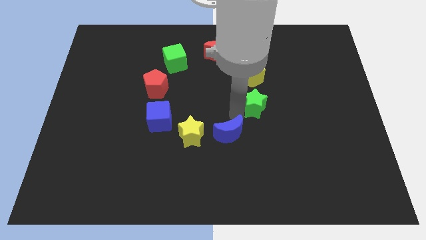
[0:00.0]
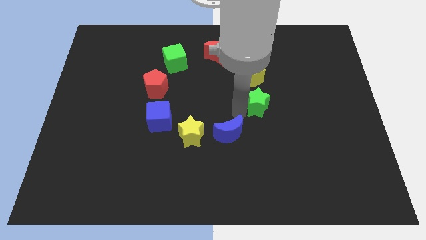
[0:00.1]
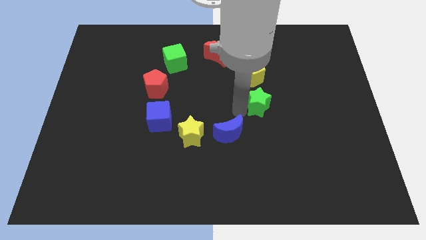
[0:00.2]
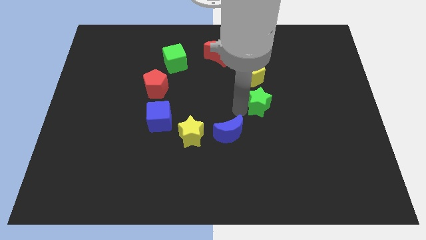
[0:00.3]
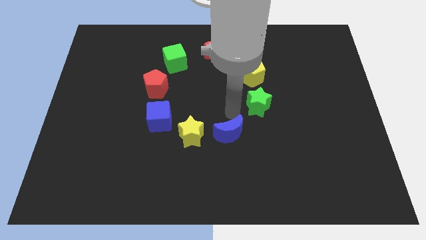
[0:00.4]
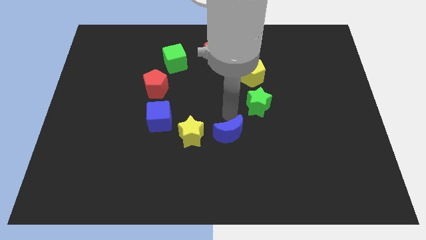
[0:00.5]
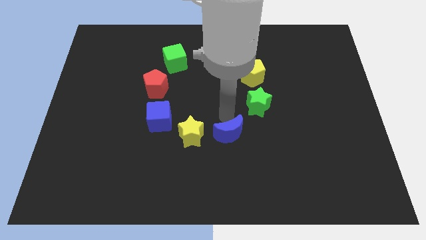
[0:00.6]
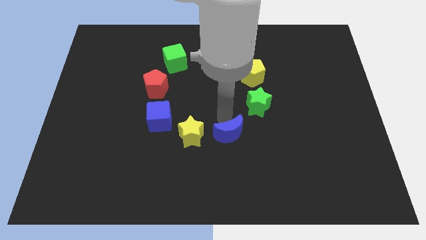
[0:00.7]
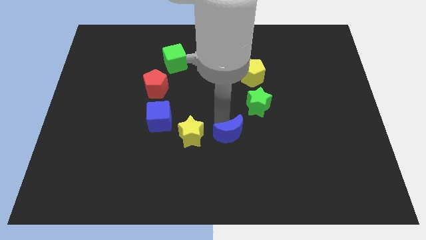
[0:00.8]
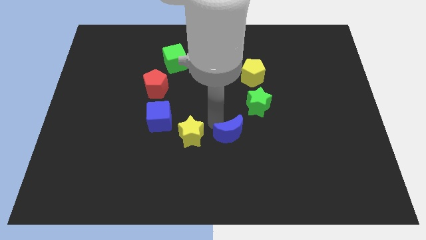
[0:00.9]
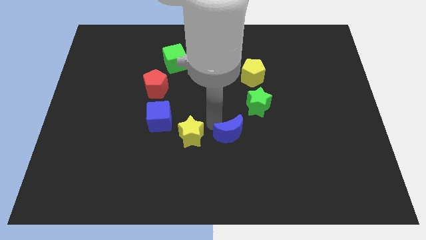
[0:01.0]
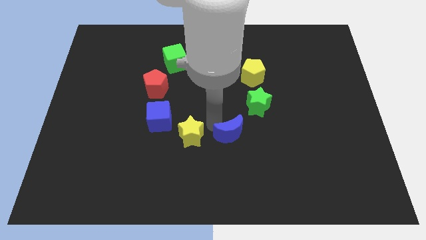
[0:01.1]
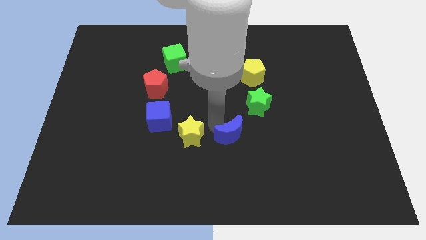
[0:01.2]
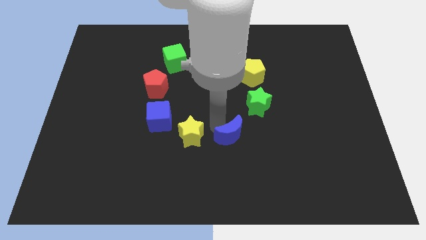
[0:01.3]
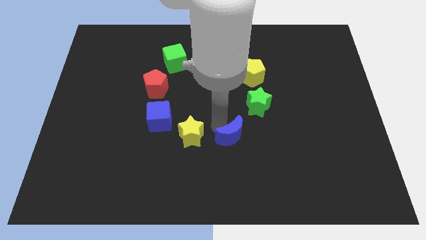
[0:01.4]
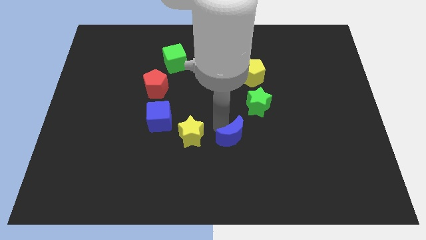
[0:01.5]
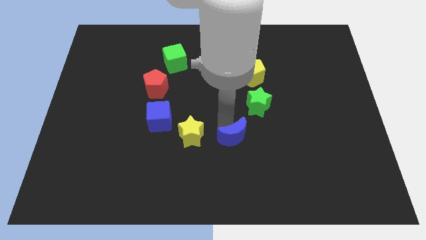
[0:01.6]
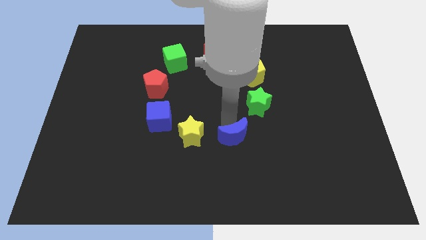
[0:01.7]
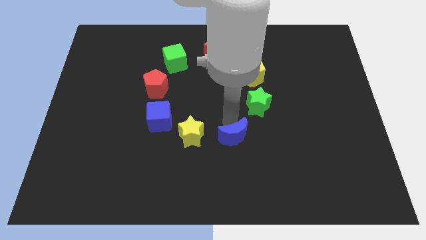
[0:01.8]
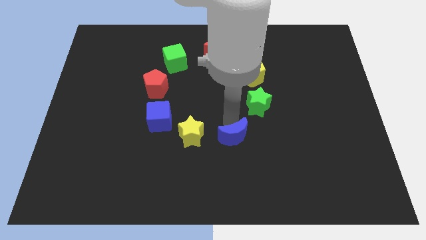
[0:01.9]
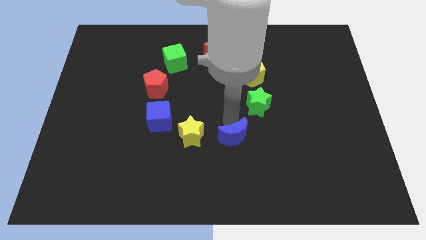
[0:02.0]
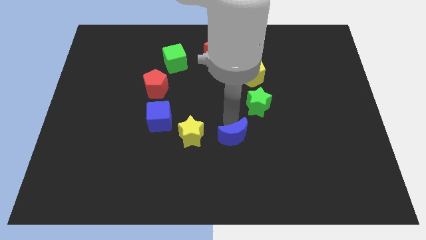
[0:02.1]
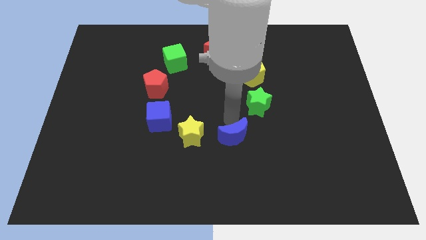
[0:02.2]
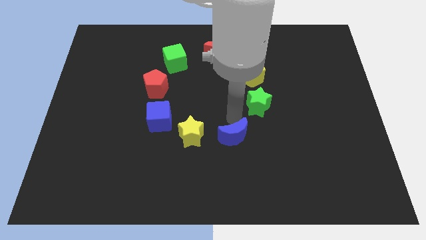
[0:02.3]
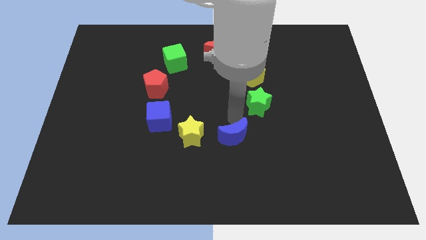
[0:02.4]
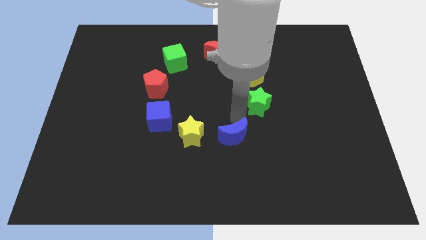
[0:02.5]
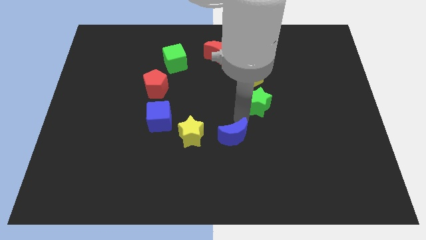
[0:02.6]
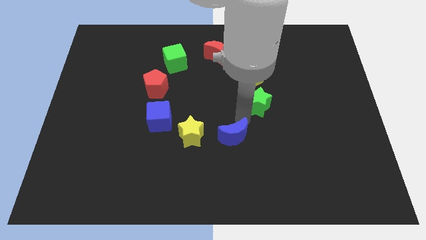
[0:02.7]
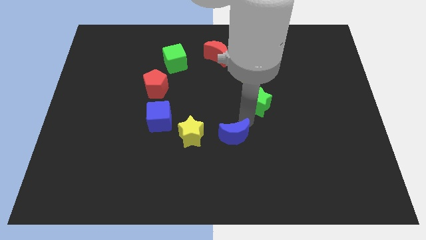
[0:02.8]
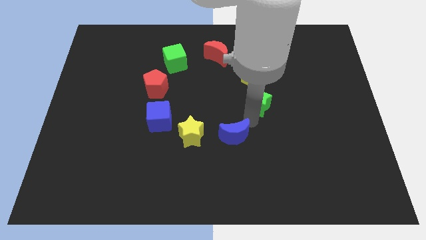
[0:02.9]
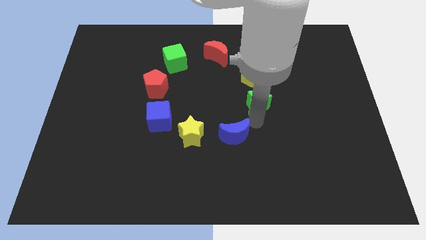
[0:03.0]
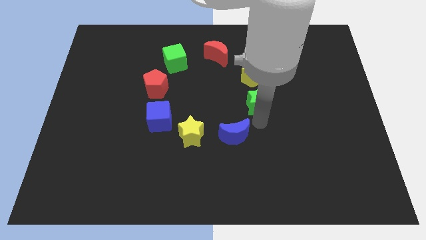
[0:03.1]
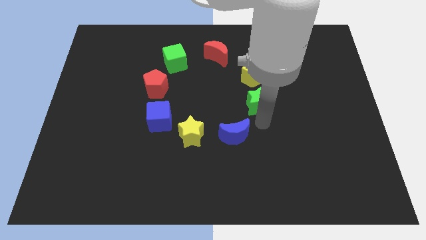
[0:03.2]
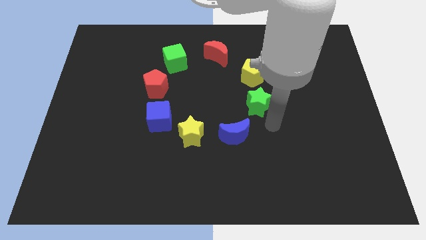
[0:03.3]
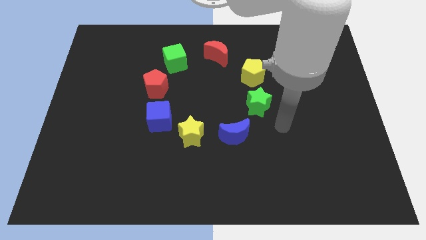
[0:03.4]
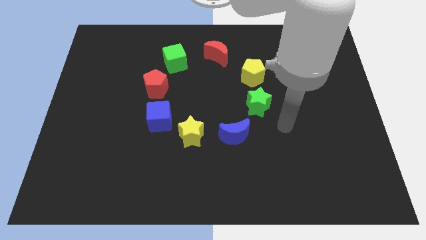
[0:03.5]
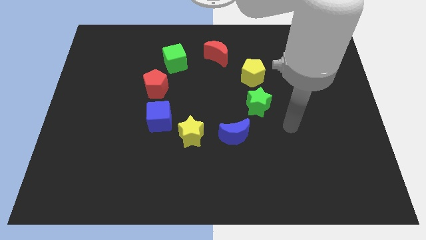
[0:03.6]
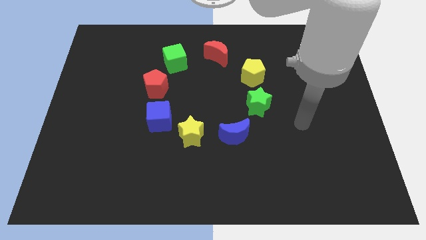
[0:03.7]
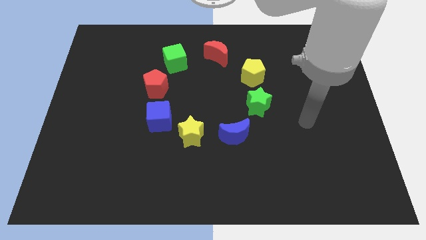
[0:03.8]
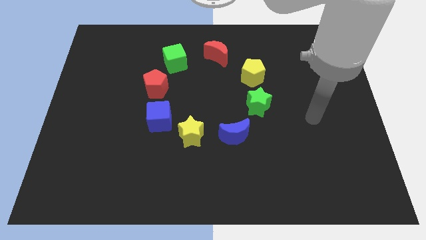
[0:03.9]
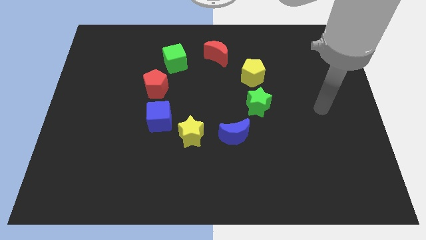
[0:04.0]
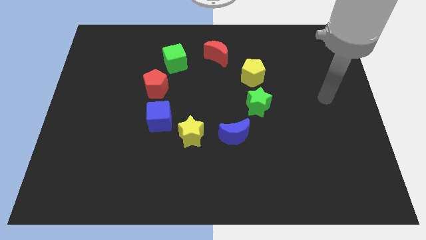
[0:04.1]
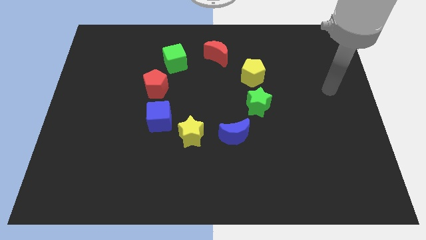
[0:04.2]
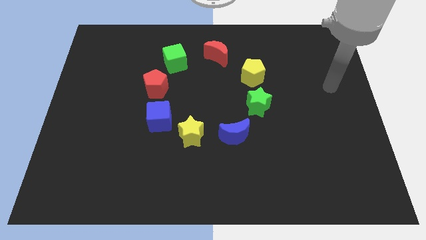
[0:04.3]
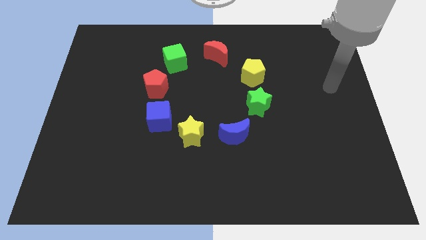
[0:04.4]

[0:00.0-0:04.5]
slightly push the blue crescent towards bottom right

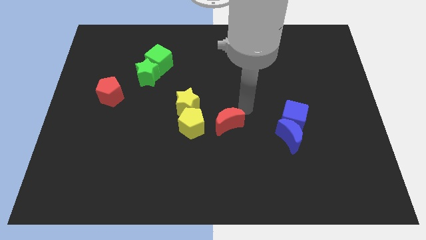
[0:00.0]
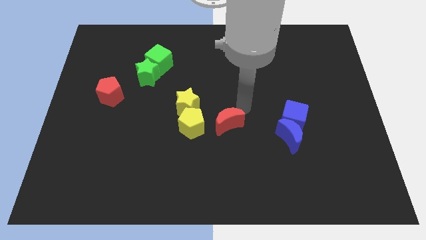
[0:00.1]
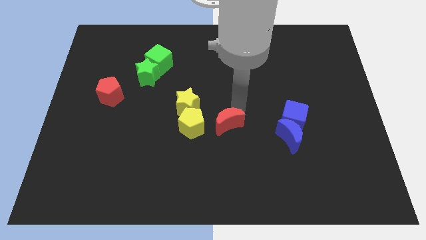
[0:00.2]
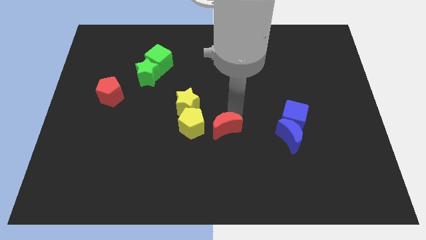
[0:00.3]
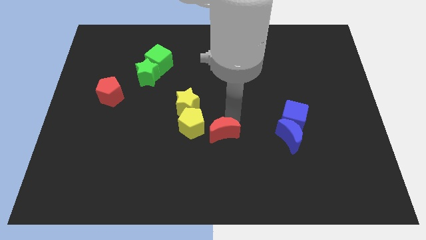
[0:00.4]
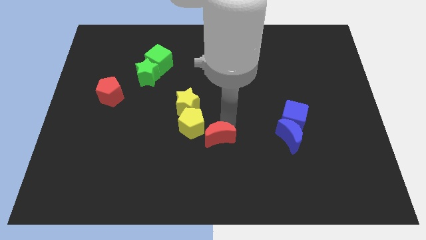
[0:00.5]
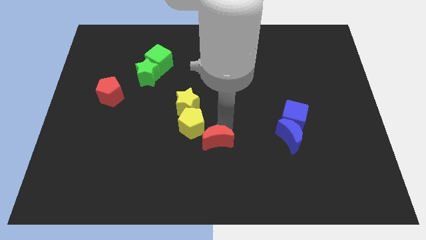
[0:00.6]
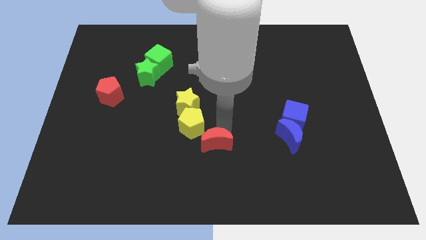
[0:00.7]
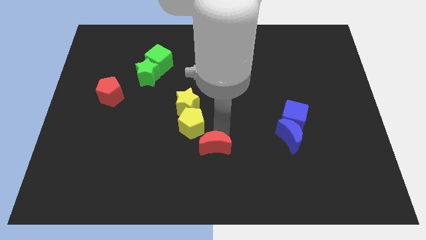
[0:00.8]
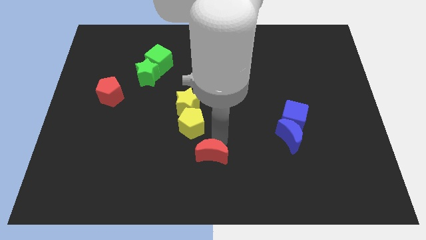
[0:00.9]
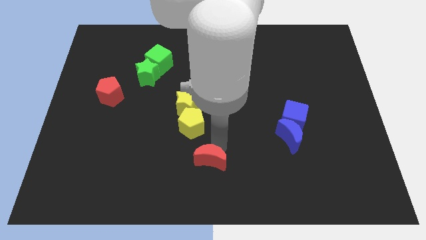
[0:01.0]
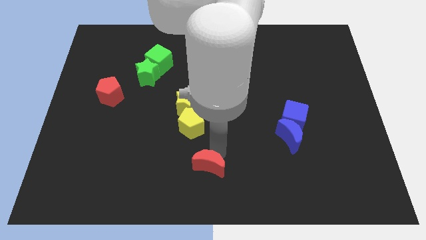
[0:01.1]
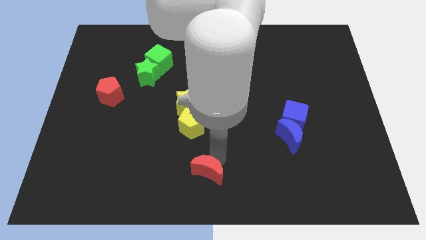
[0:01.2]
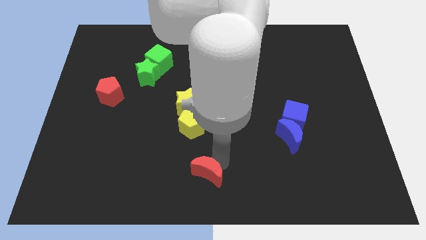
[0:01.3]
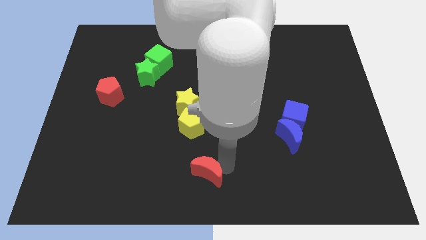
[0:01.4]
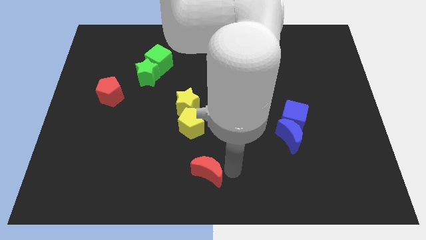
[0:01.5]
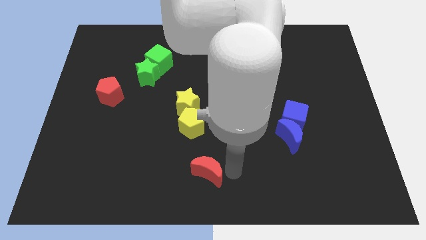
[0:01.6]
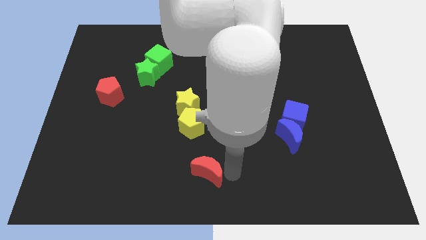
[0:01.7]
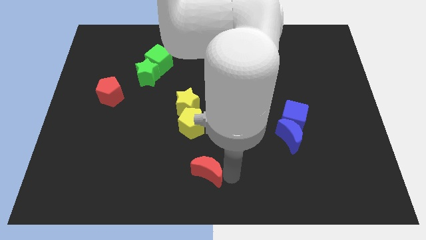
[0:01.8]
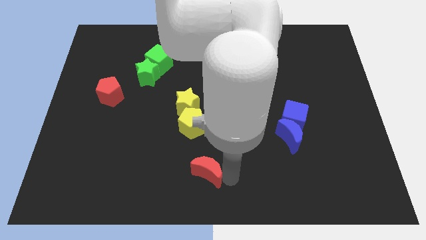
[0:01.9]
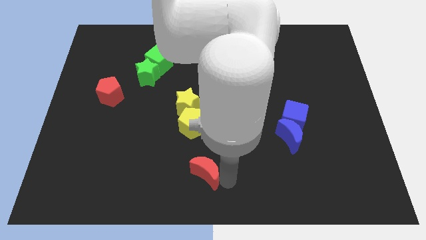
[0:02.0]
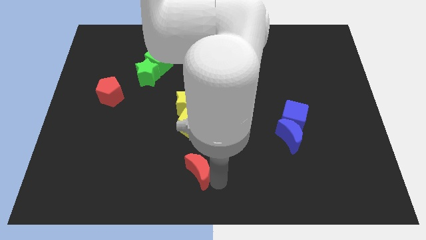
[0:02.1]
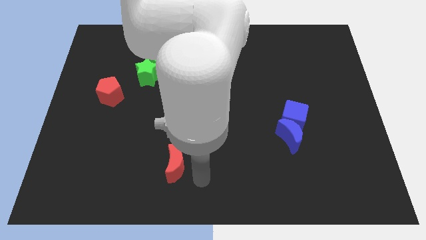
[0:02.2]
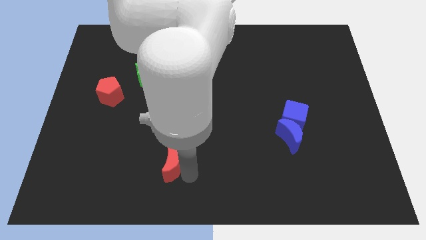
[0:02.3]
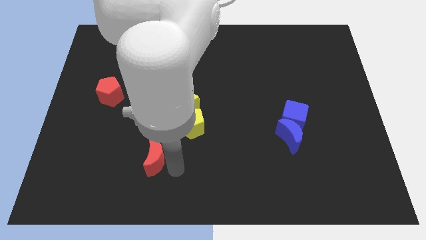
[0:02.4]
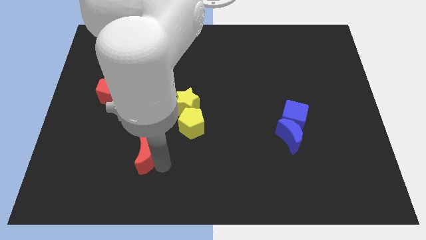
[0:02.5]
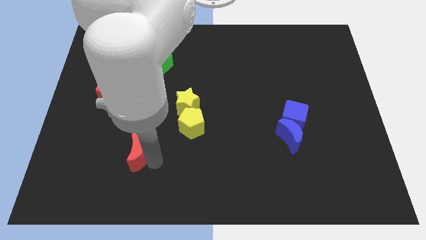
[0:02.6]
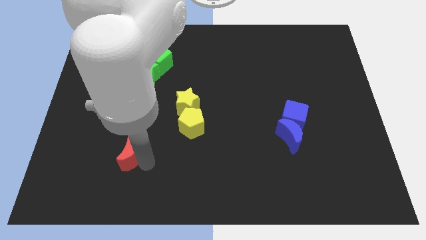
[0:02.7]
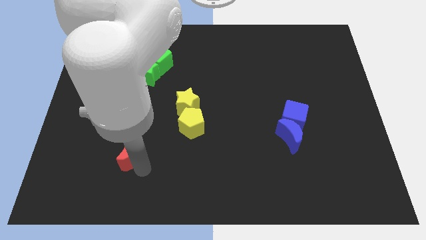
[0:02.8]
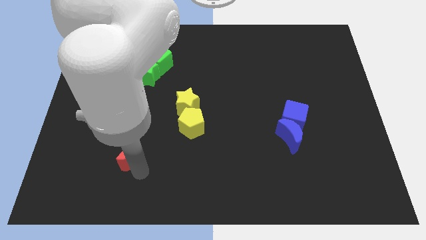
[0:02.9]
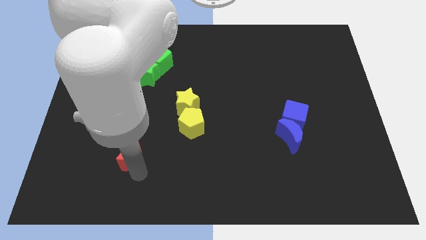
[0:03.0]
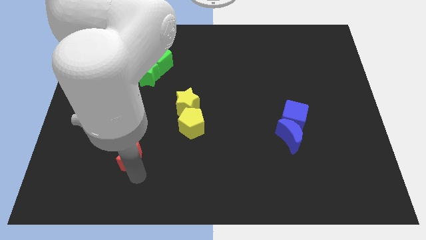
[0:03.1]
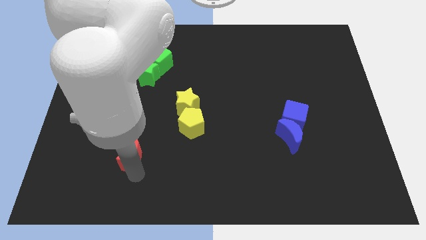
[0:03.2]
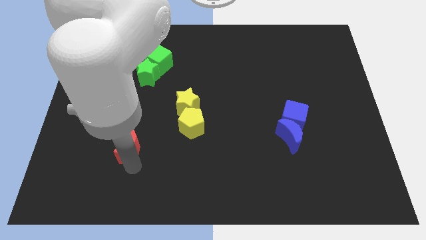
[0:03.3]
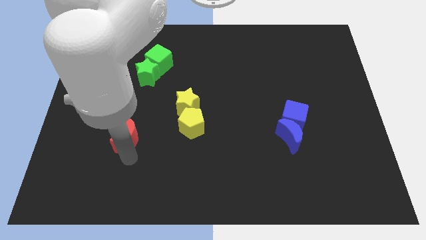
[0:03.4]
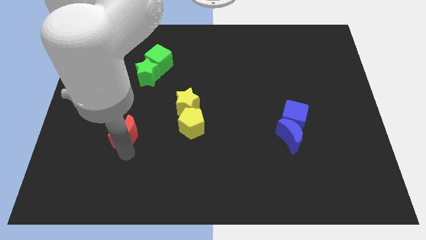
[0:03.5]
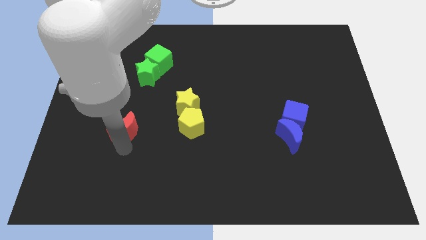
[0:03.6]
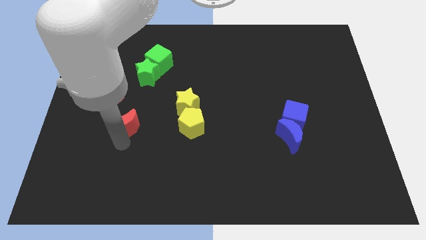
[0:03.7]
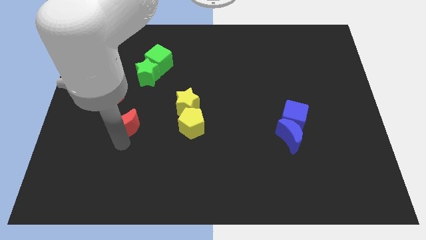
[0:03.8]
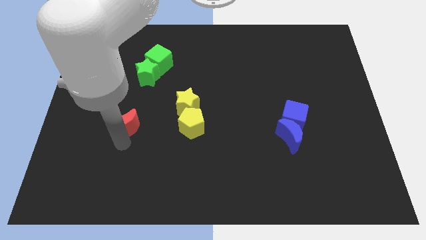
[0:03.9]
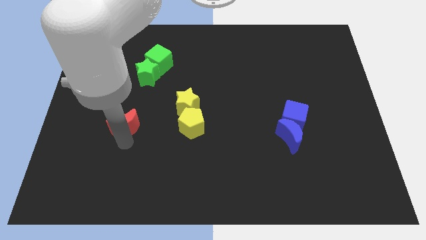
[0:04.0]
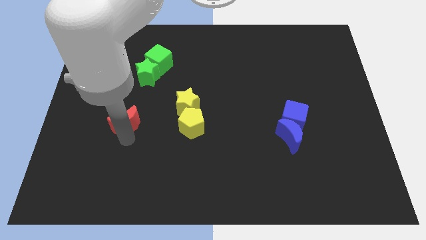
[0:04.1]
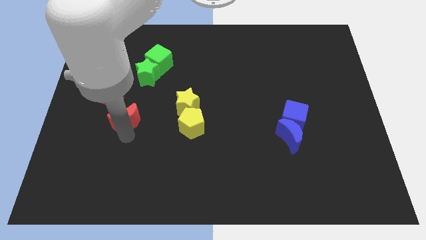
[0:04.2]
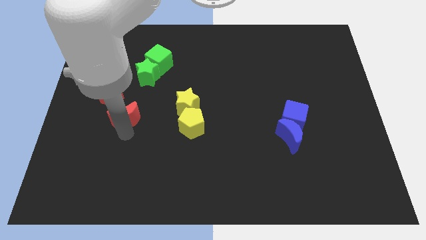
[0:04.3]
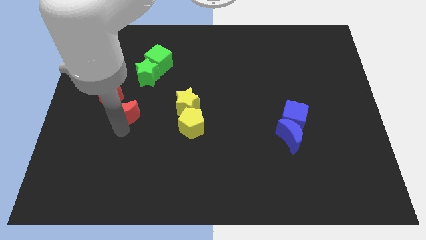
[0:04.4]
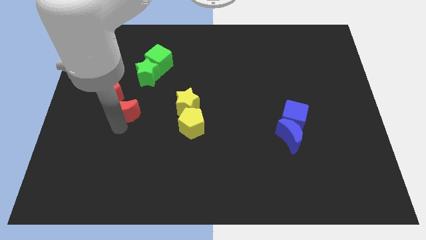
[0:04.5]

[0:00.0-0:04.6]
place red moon to the bottom right of the red pentagon
